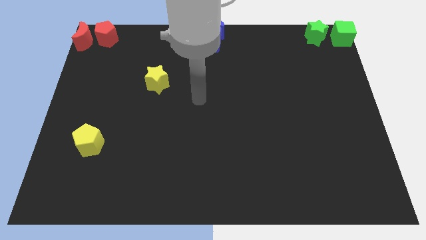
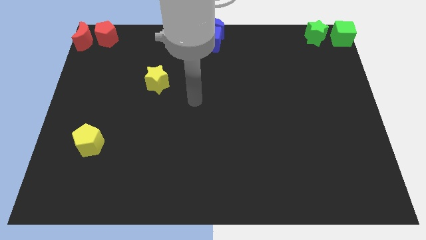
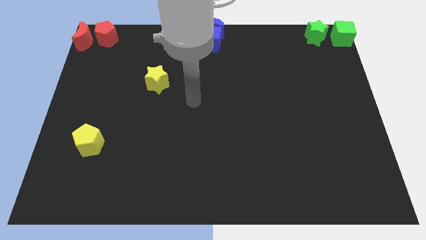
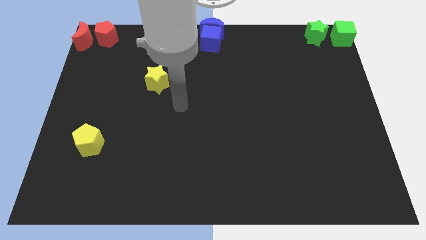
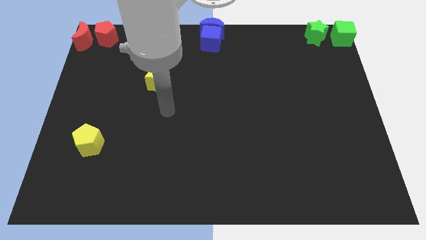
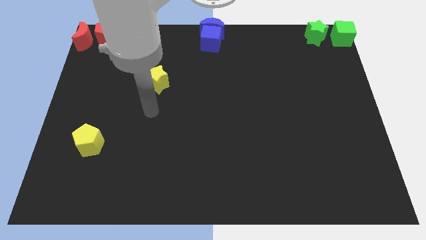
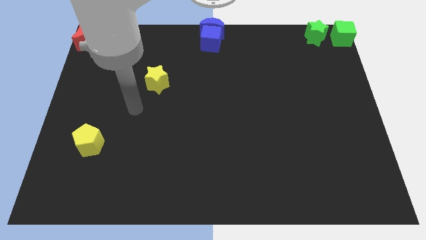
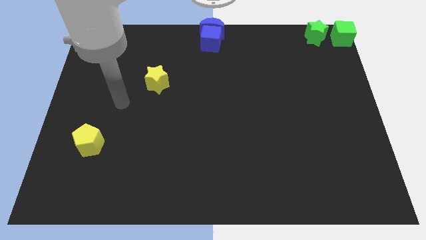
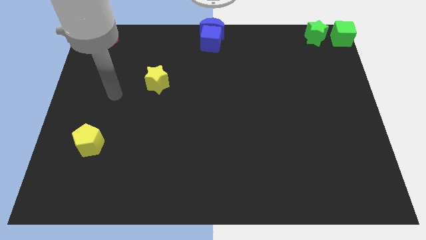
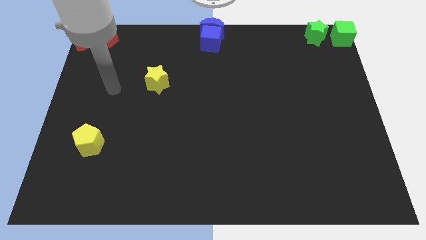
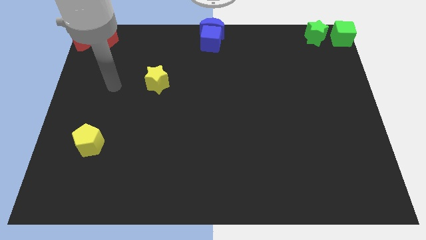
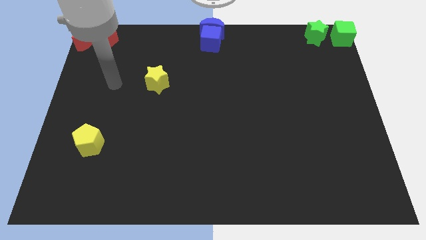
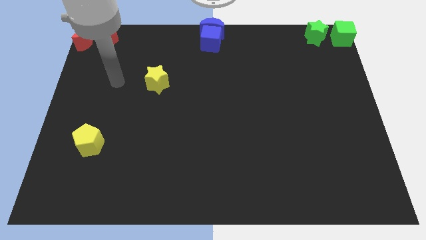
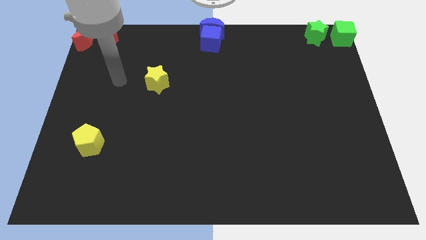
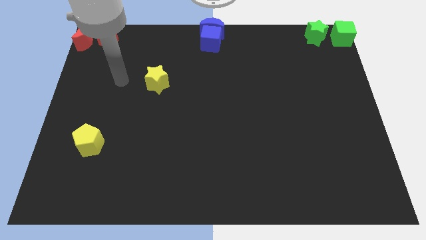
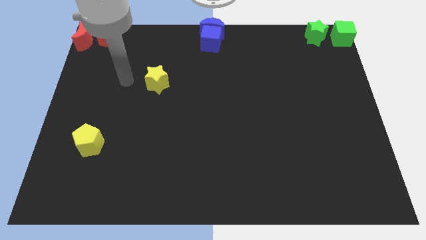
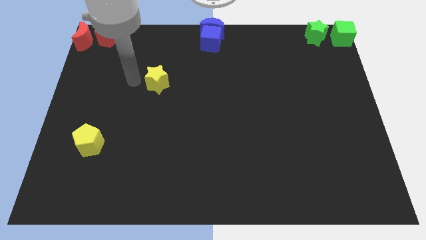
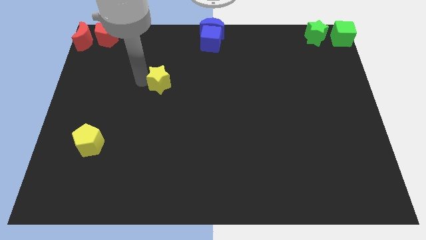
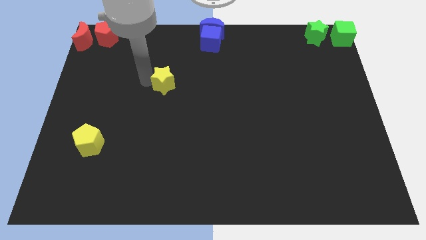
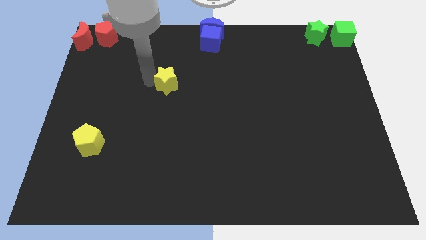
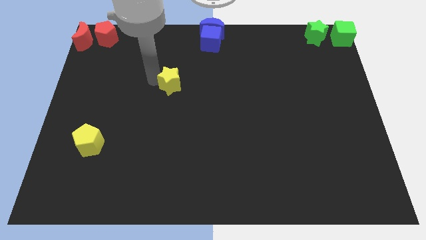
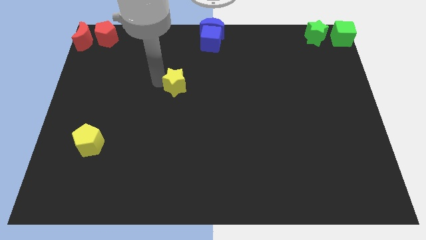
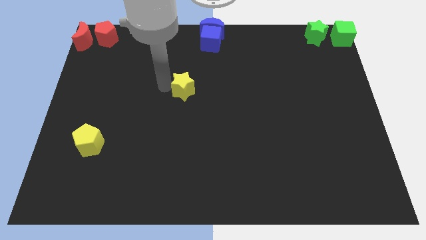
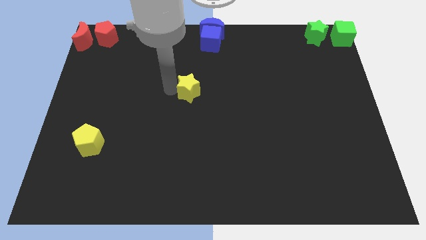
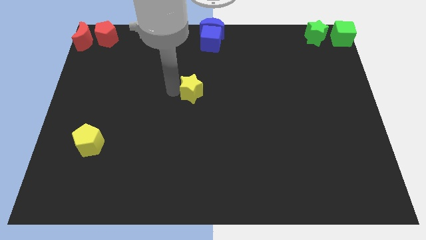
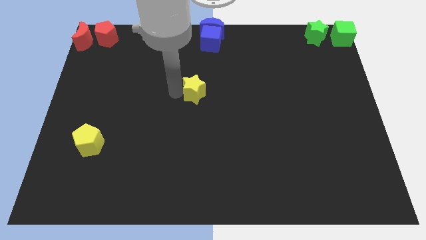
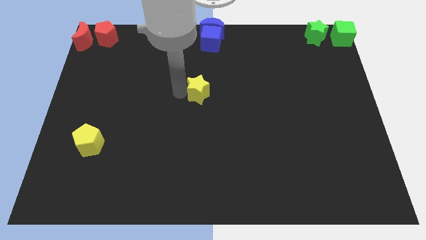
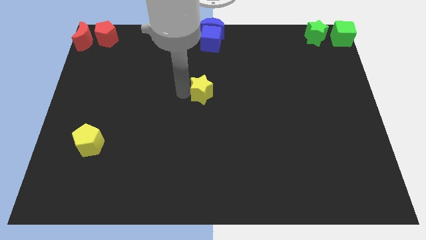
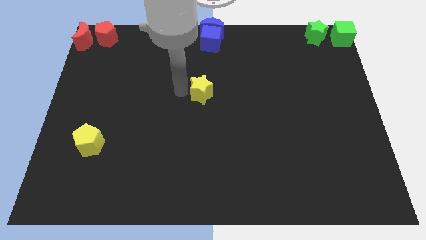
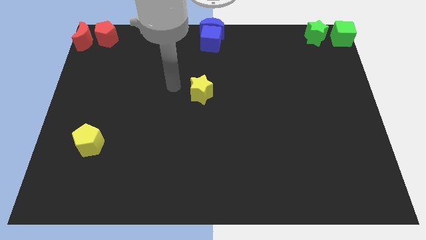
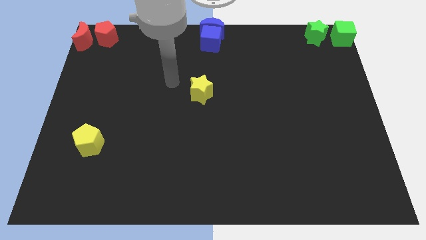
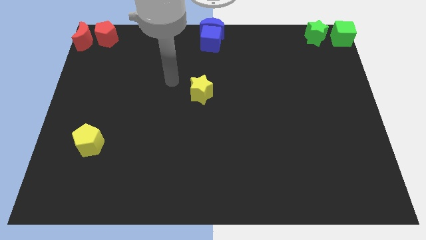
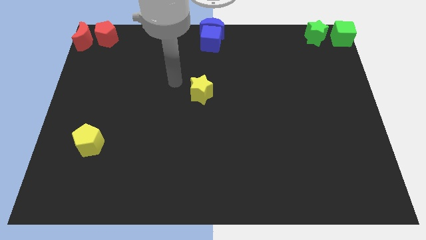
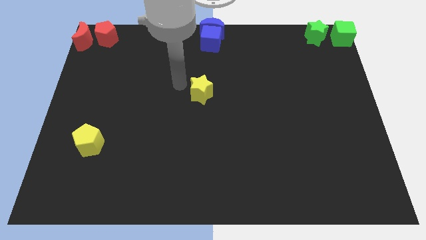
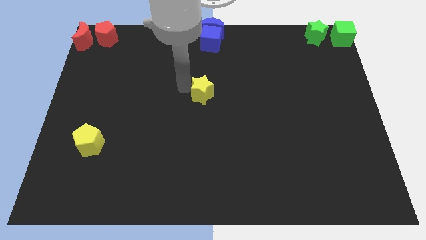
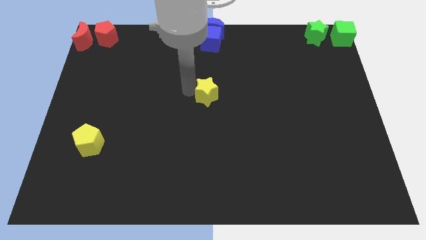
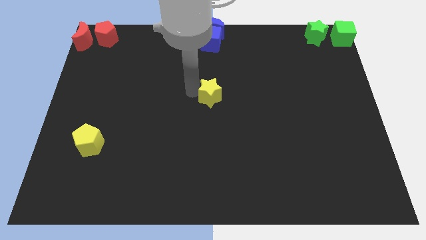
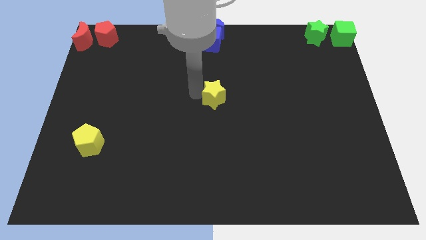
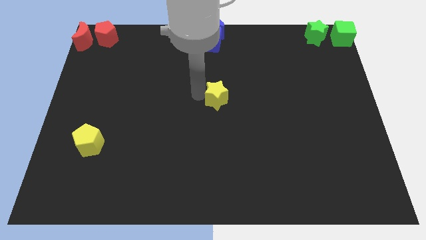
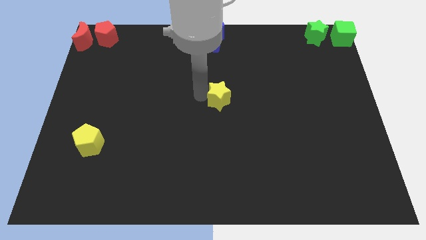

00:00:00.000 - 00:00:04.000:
push the yellow star to the center of the board

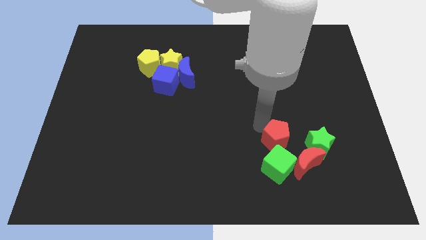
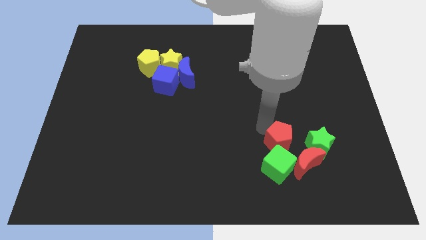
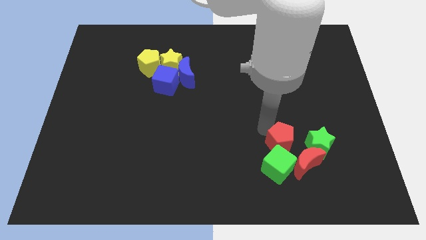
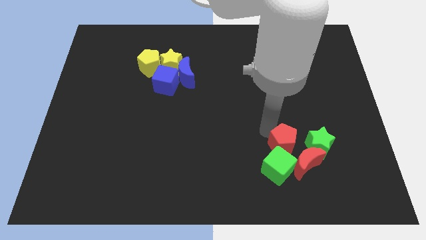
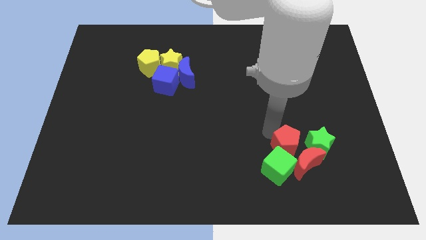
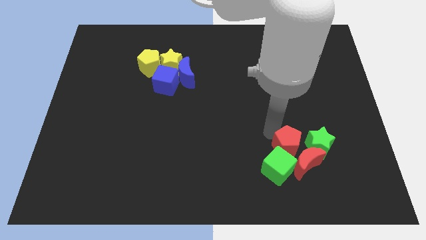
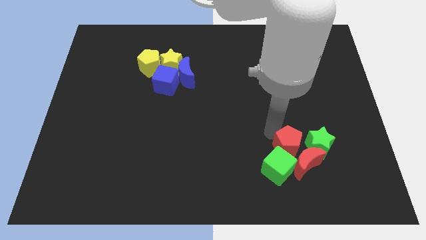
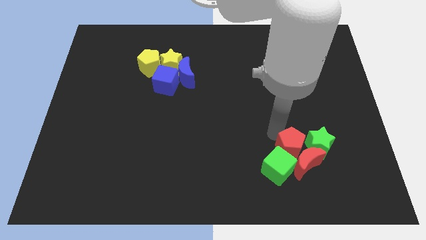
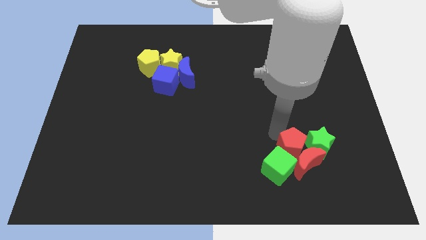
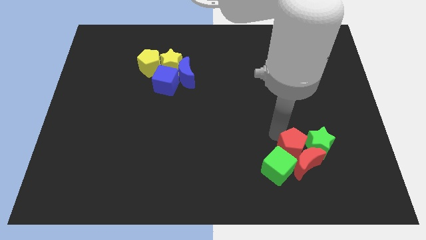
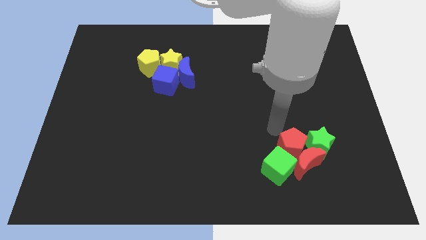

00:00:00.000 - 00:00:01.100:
place the red pentagon in between the green star and green cube

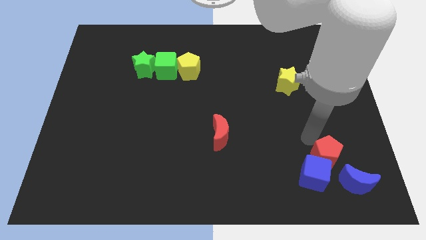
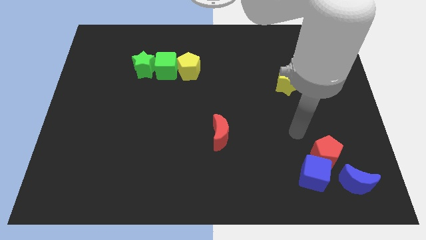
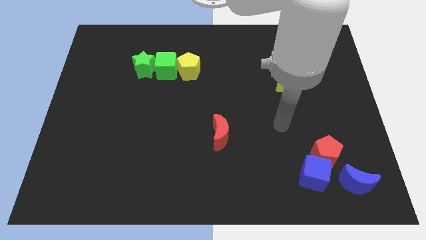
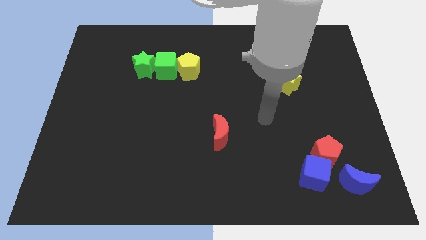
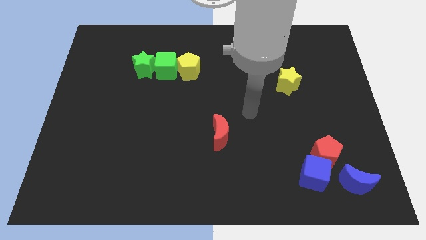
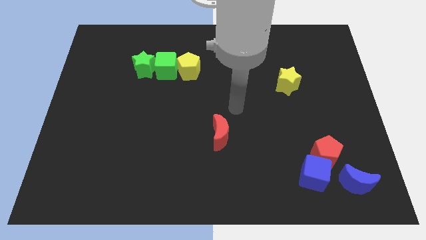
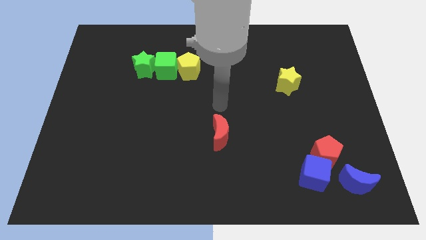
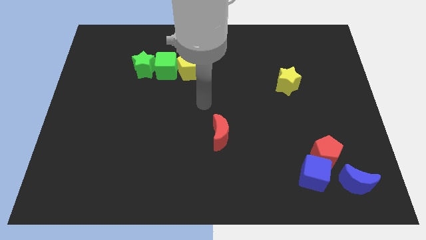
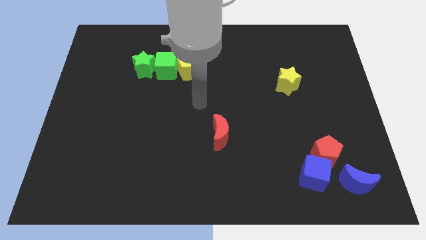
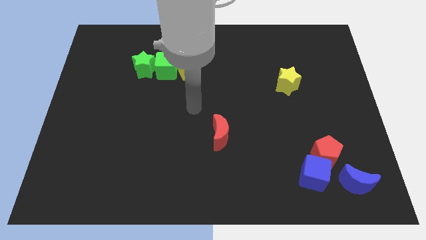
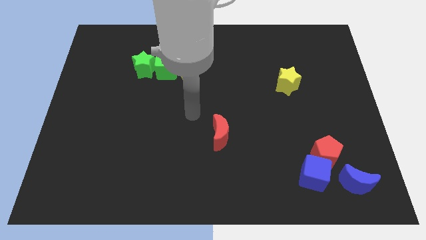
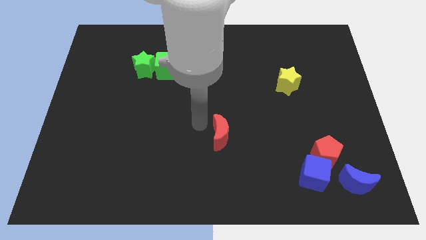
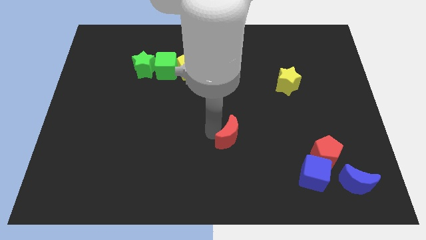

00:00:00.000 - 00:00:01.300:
touch the left side of the red moon

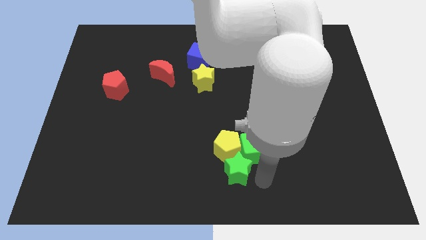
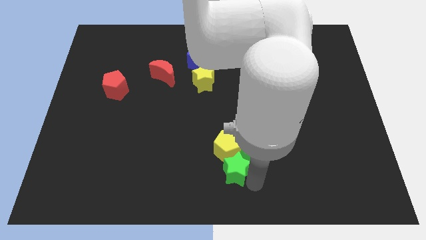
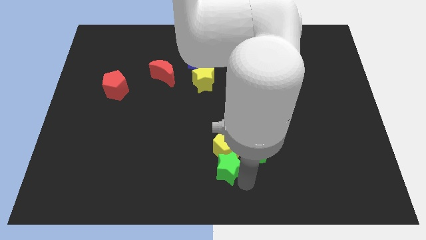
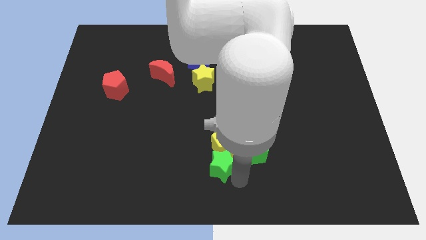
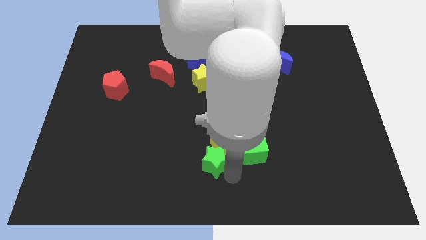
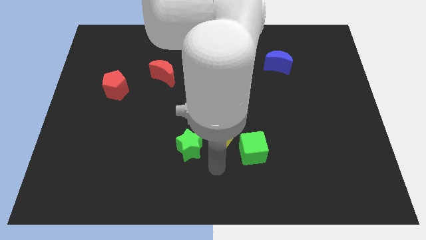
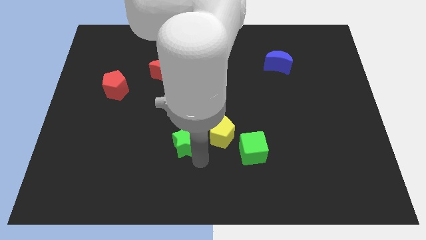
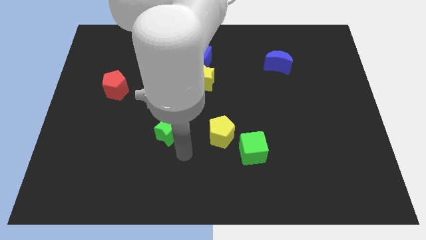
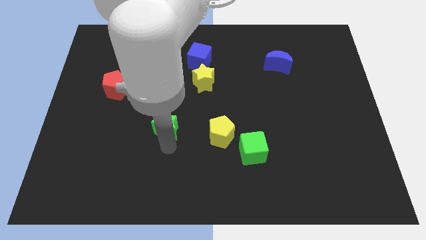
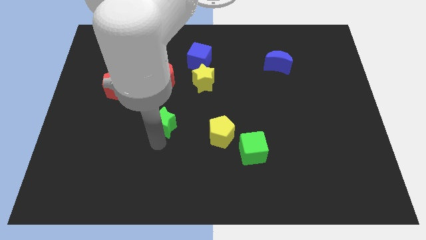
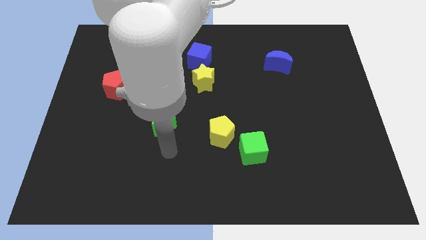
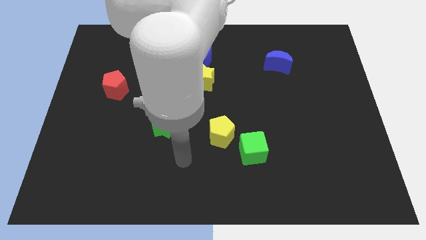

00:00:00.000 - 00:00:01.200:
separate the green star from yellow pentagon

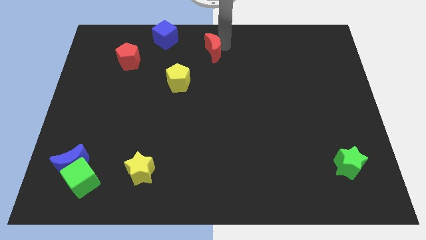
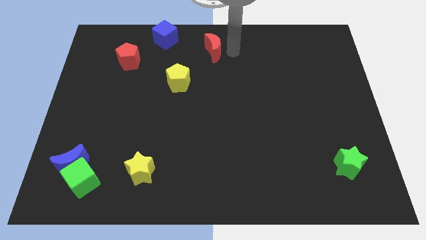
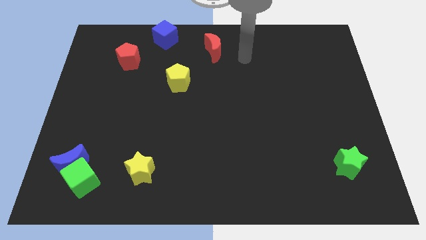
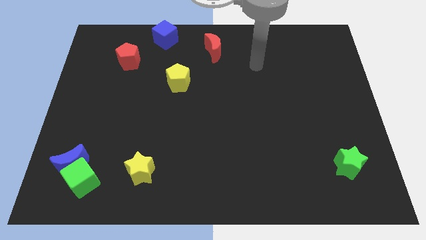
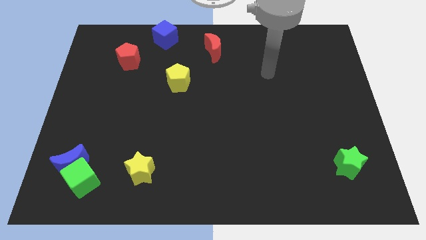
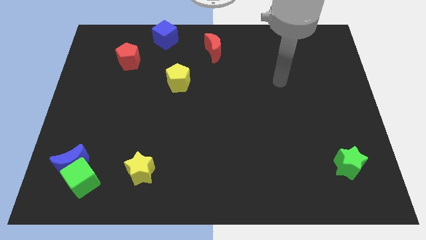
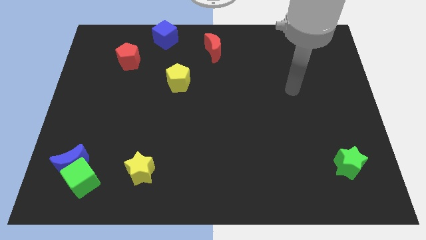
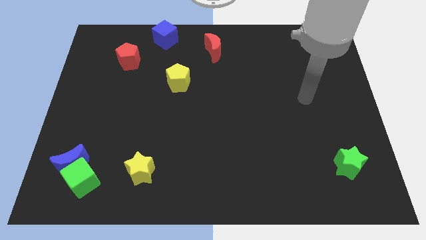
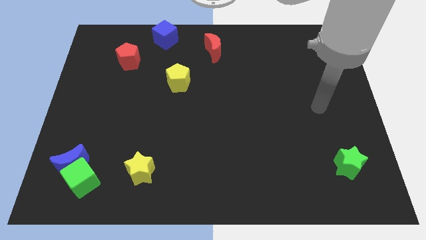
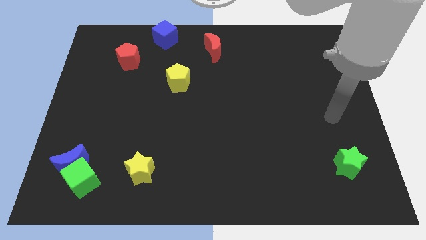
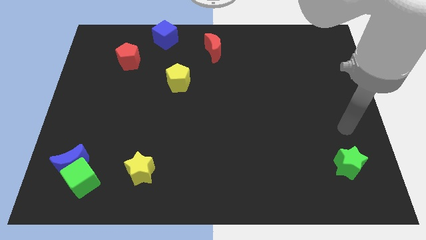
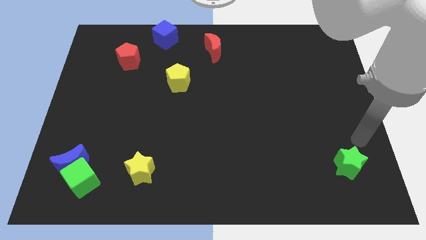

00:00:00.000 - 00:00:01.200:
move away from the red crescent
